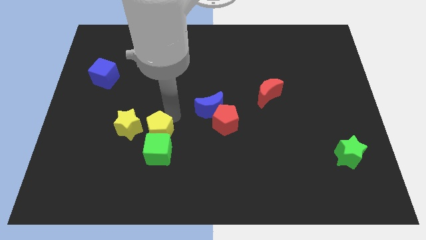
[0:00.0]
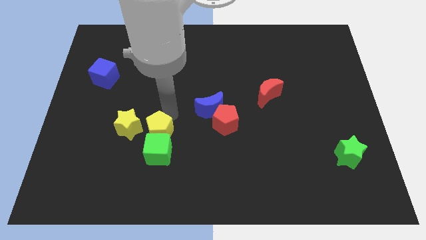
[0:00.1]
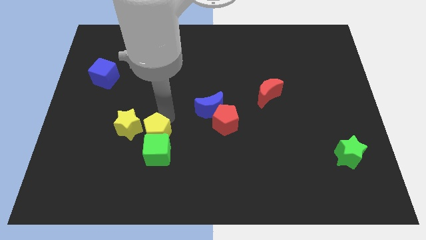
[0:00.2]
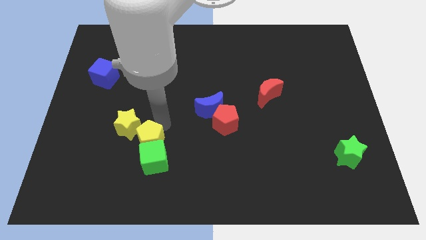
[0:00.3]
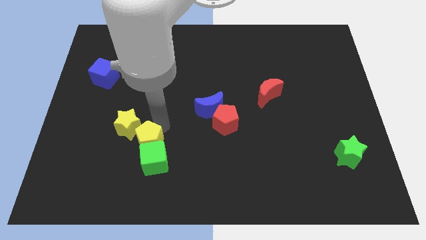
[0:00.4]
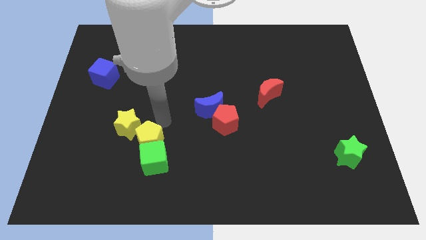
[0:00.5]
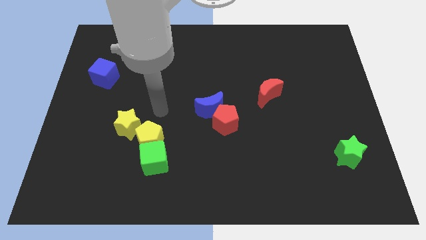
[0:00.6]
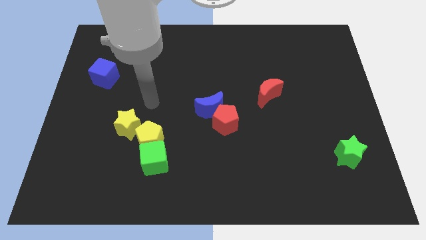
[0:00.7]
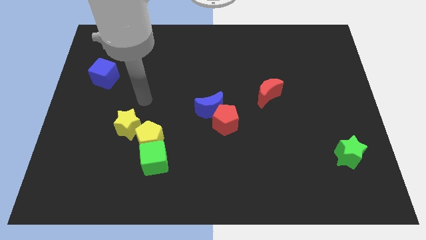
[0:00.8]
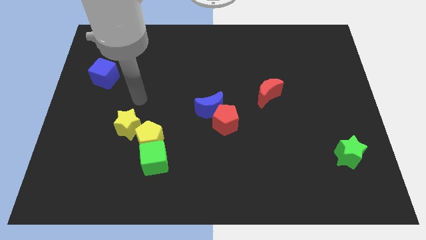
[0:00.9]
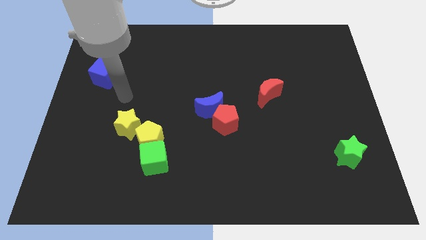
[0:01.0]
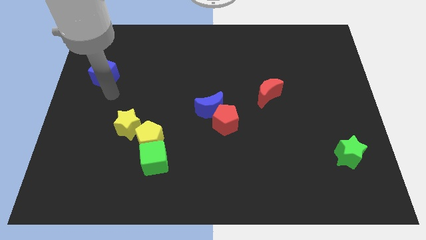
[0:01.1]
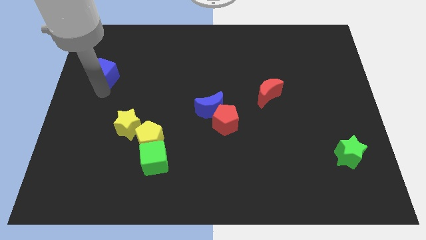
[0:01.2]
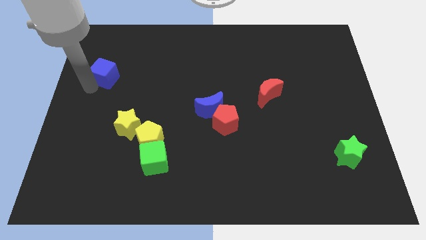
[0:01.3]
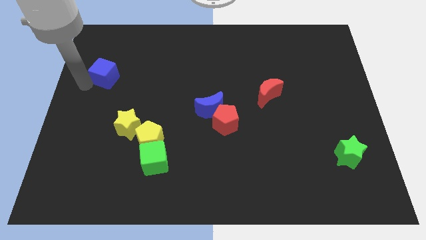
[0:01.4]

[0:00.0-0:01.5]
push the yellow pentagon towards the green cube

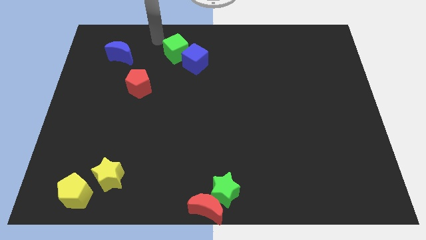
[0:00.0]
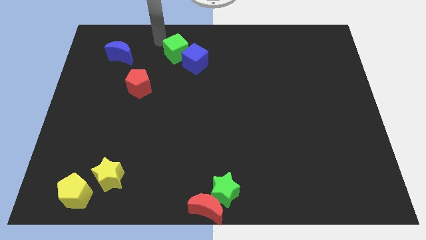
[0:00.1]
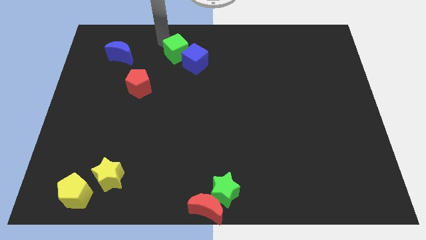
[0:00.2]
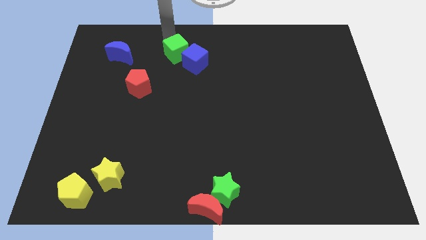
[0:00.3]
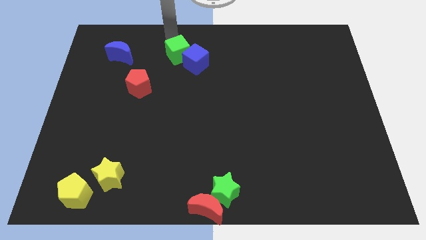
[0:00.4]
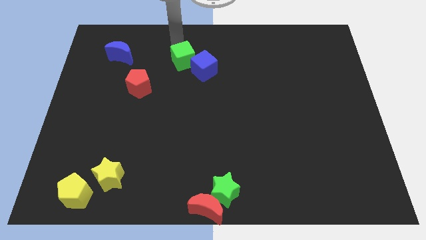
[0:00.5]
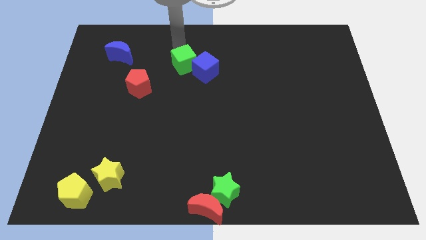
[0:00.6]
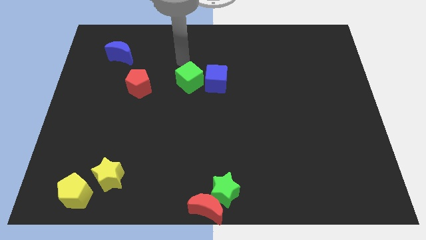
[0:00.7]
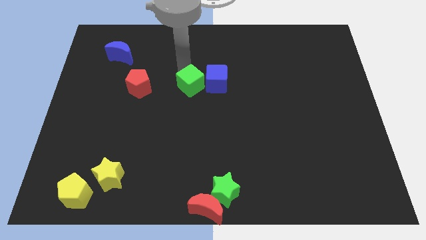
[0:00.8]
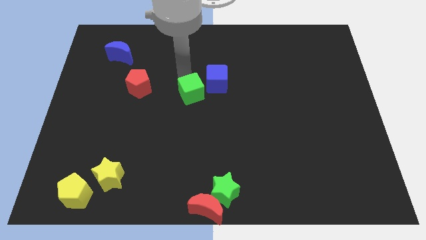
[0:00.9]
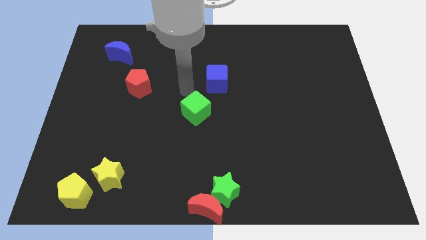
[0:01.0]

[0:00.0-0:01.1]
push the blue cube with the green cube

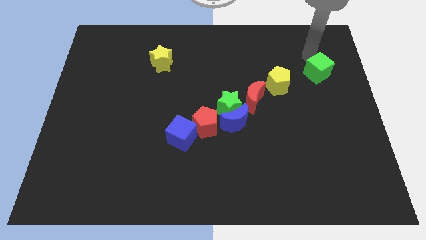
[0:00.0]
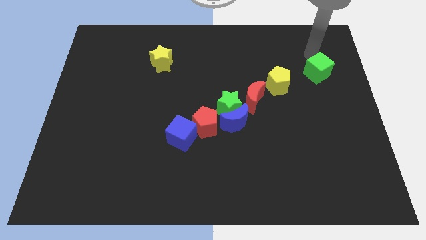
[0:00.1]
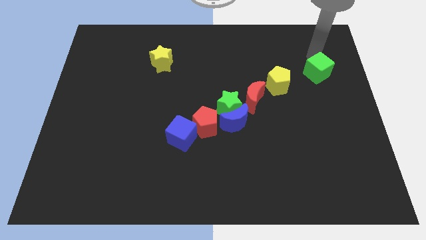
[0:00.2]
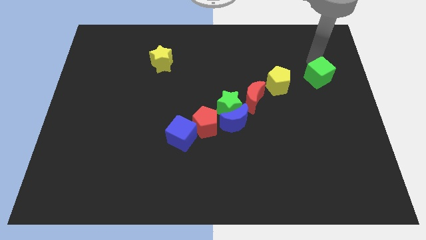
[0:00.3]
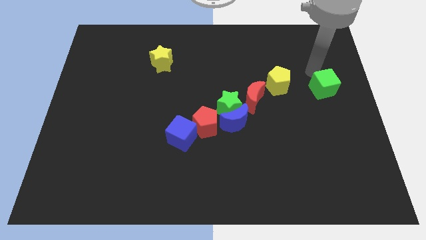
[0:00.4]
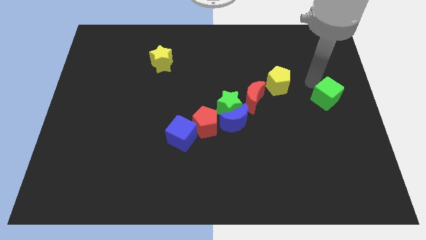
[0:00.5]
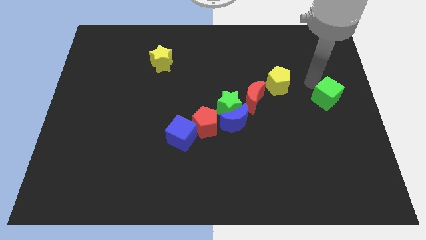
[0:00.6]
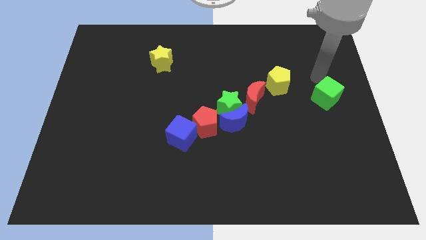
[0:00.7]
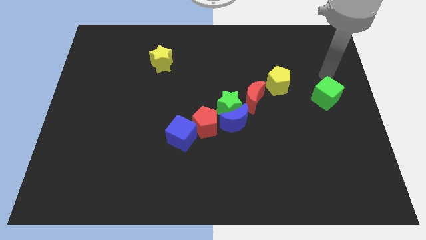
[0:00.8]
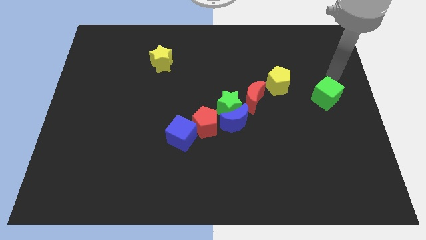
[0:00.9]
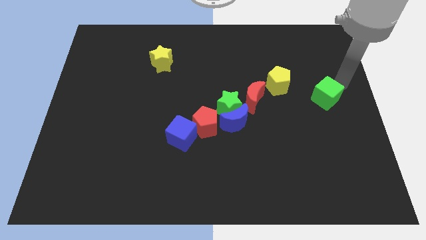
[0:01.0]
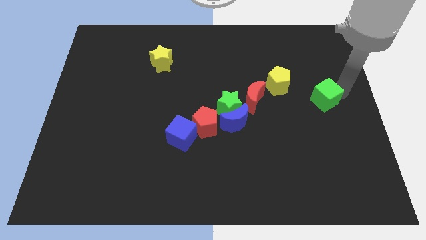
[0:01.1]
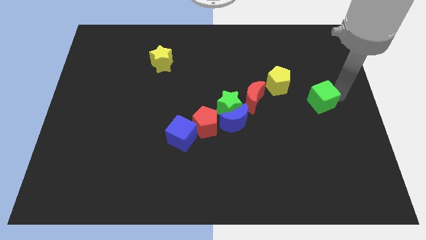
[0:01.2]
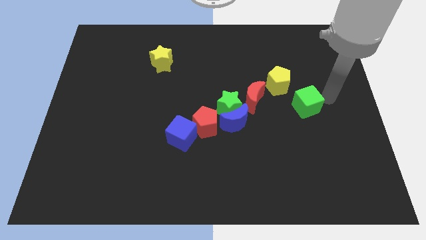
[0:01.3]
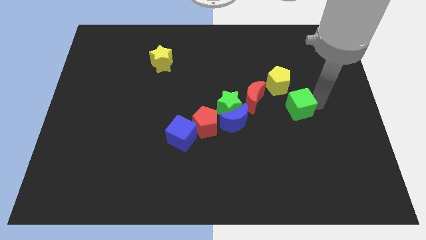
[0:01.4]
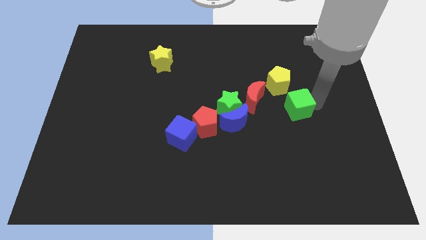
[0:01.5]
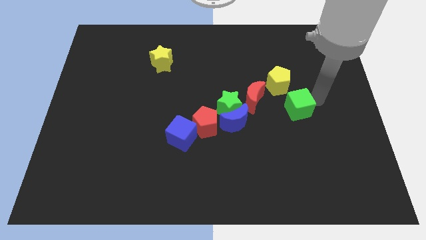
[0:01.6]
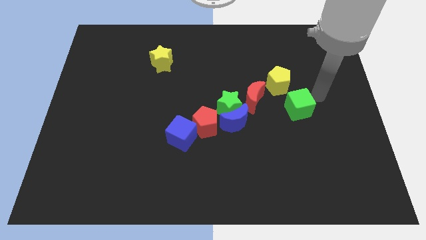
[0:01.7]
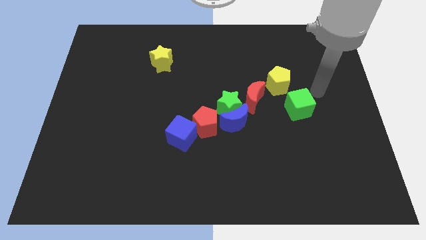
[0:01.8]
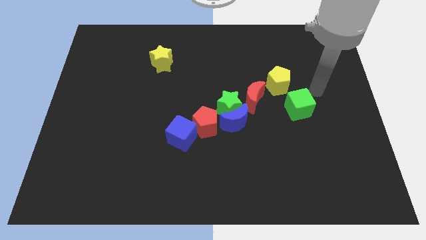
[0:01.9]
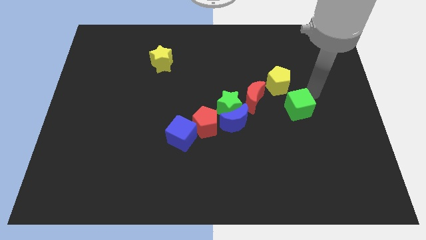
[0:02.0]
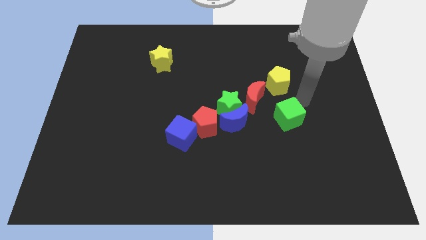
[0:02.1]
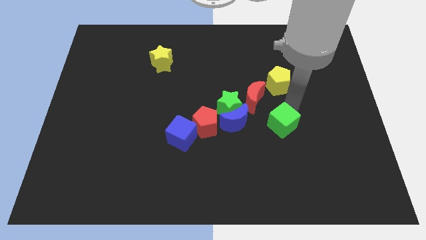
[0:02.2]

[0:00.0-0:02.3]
put the green cube below the yellow pentagon

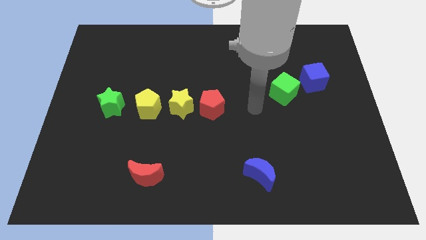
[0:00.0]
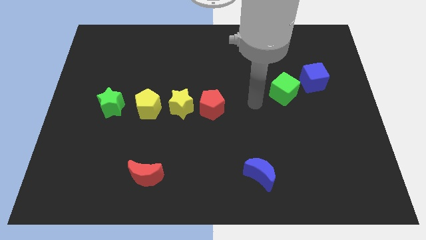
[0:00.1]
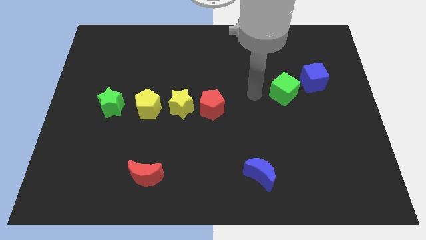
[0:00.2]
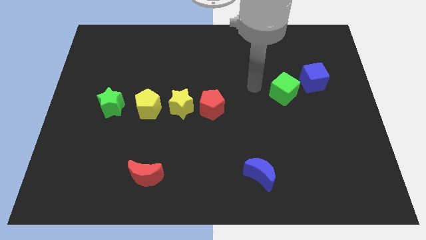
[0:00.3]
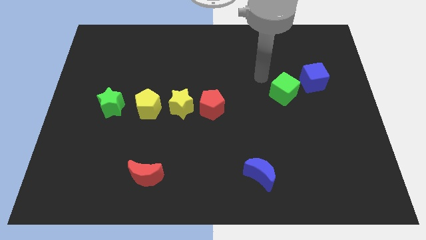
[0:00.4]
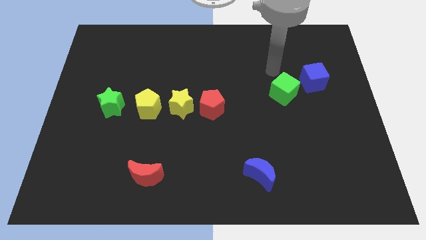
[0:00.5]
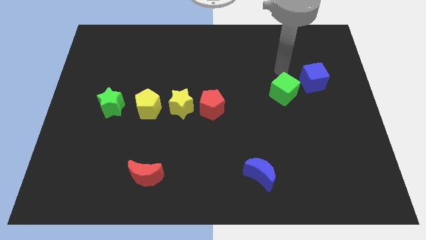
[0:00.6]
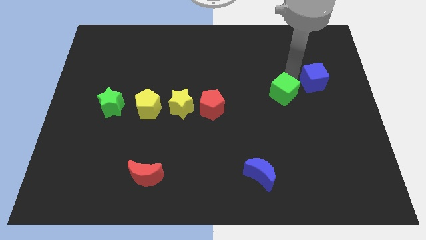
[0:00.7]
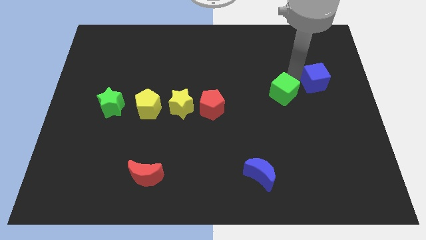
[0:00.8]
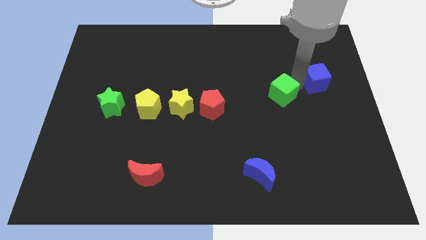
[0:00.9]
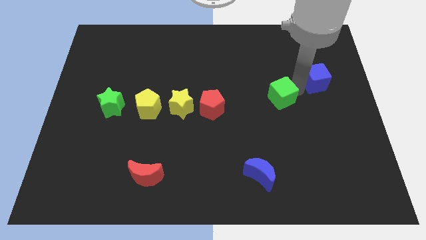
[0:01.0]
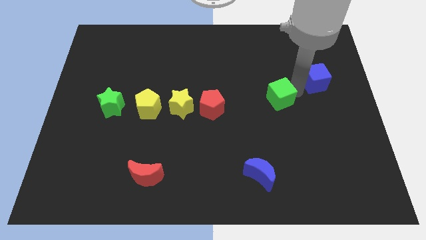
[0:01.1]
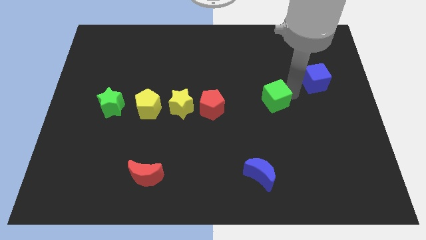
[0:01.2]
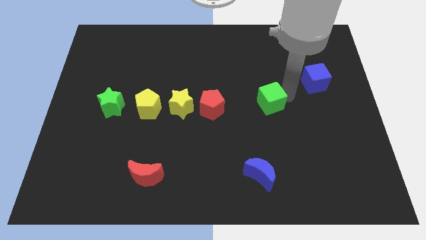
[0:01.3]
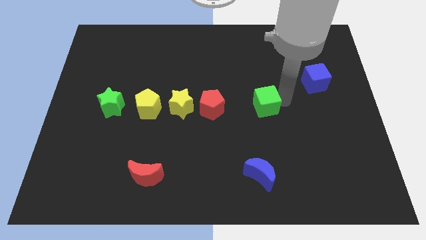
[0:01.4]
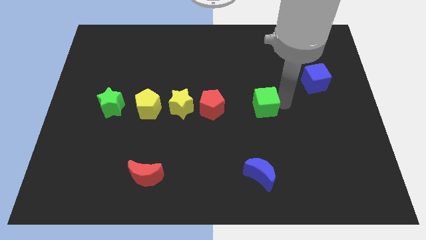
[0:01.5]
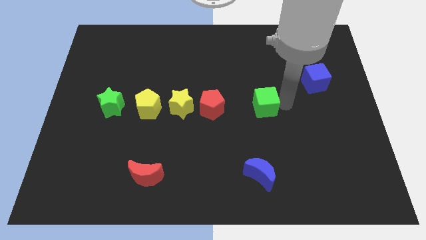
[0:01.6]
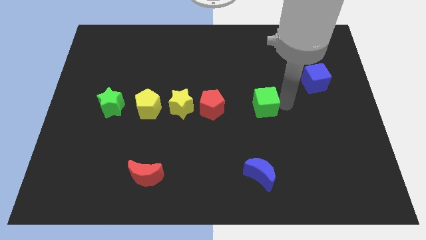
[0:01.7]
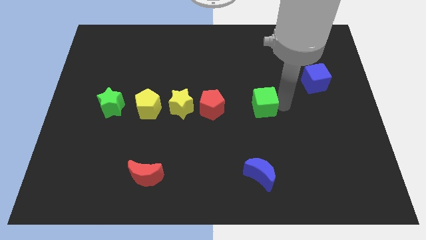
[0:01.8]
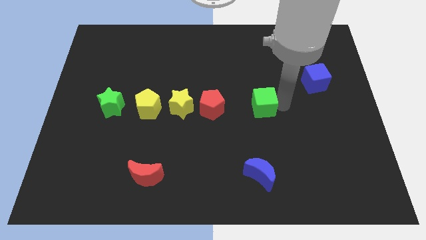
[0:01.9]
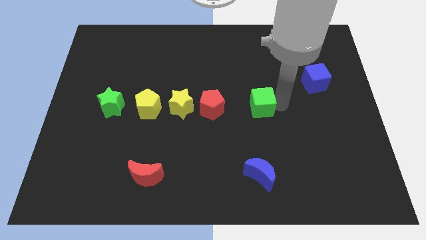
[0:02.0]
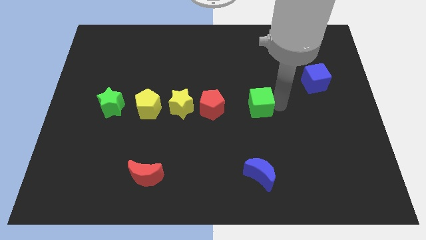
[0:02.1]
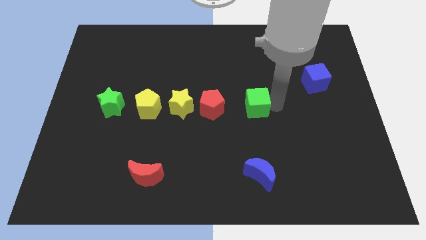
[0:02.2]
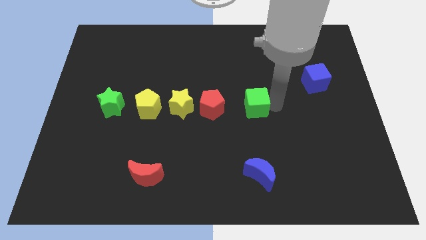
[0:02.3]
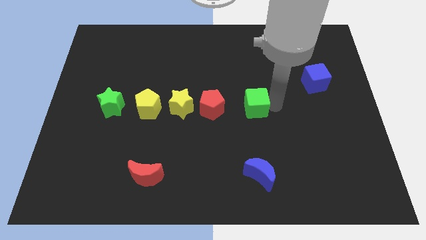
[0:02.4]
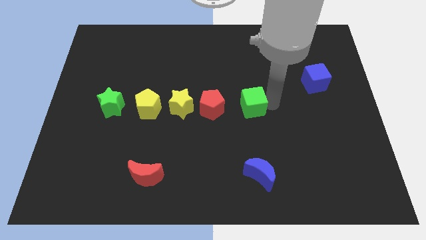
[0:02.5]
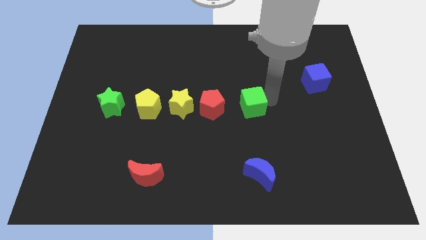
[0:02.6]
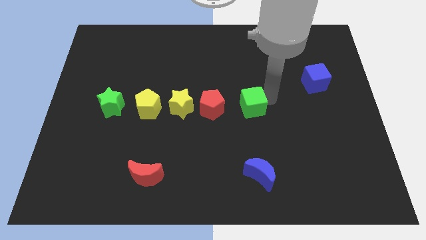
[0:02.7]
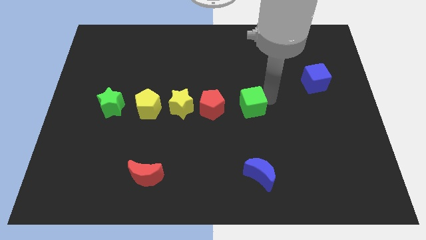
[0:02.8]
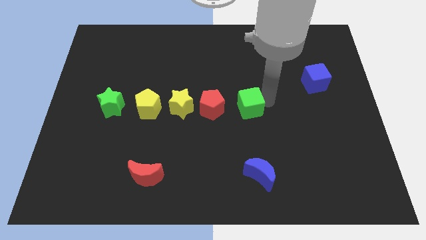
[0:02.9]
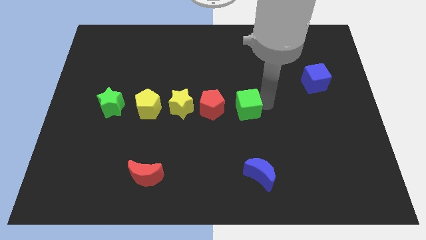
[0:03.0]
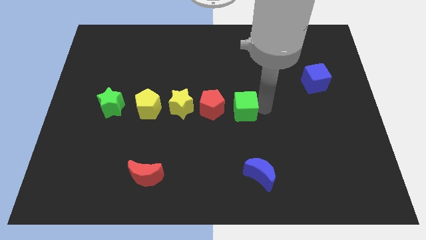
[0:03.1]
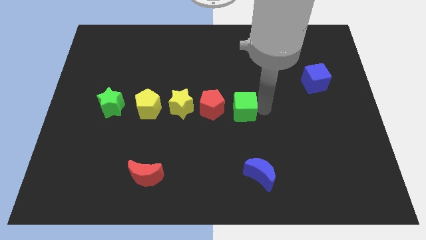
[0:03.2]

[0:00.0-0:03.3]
arrange the green cube at the right side of the red pentagon

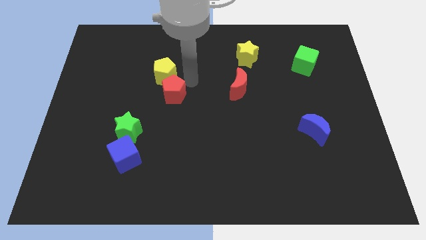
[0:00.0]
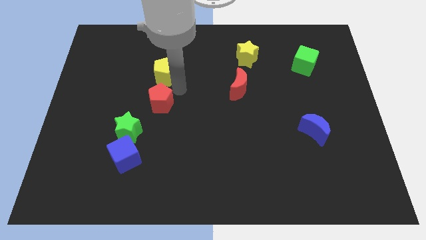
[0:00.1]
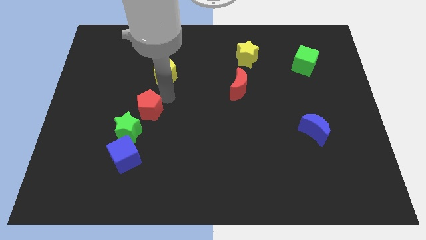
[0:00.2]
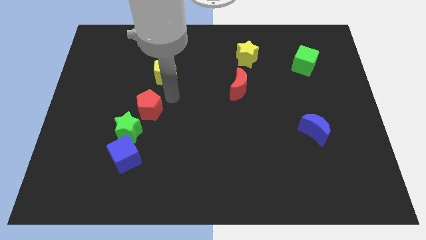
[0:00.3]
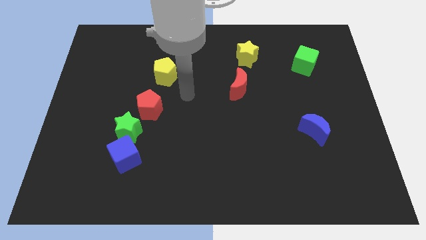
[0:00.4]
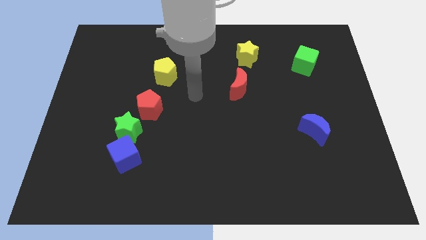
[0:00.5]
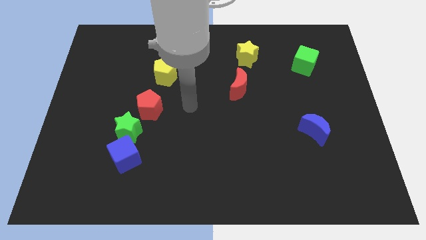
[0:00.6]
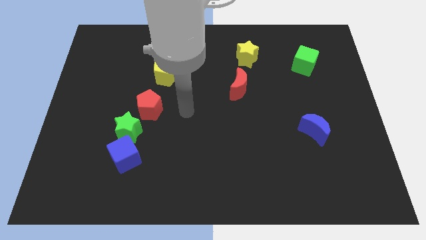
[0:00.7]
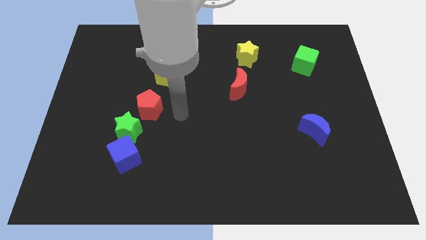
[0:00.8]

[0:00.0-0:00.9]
place the red pentagon vertically below the yellow pentagon
